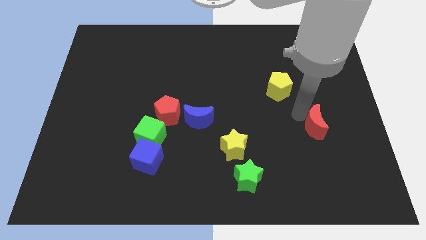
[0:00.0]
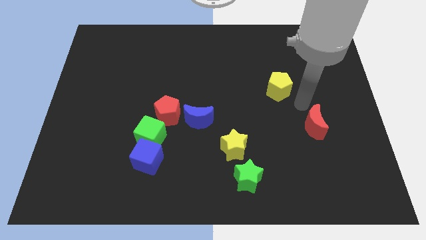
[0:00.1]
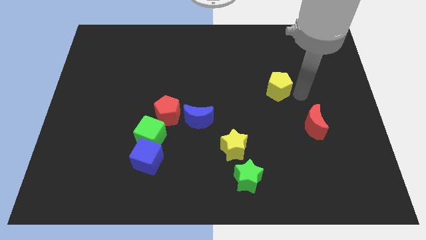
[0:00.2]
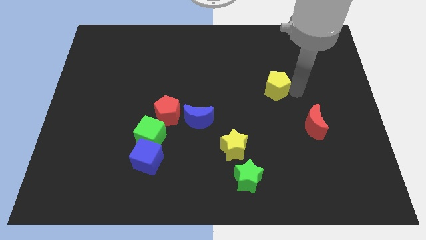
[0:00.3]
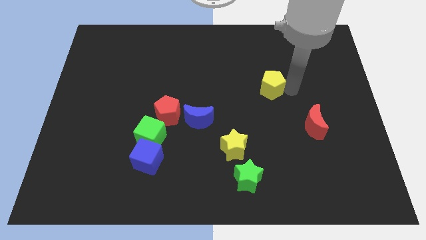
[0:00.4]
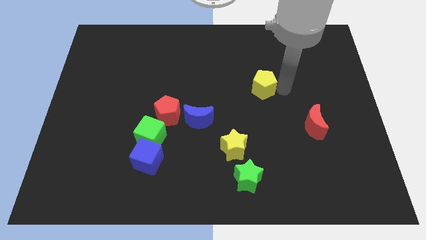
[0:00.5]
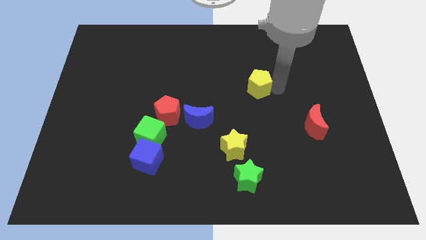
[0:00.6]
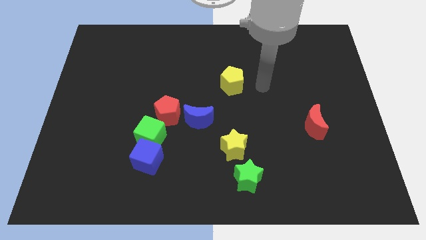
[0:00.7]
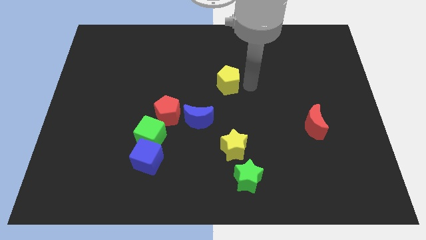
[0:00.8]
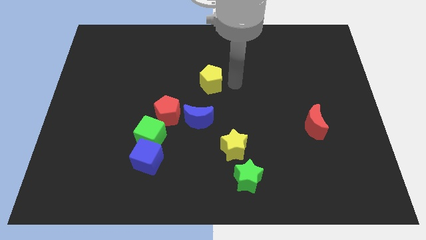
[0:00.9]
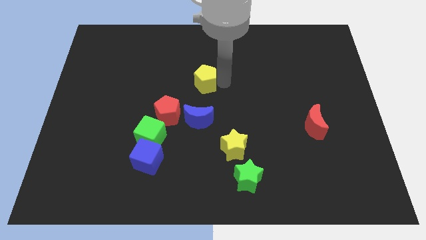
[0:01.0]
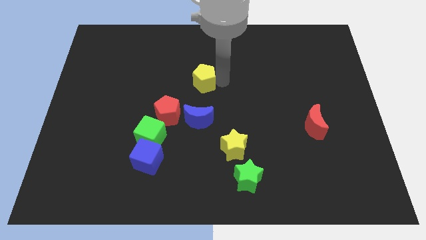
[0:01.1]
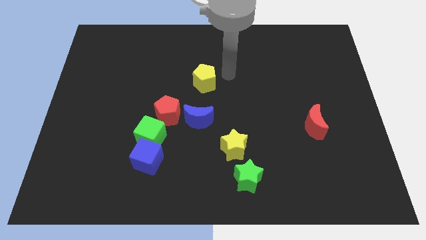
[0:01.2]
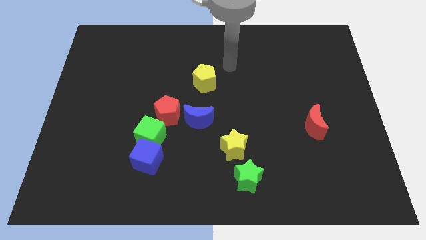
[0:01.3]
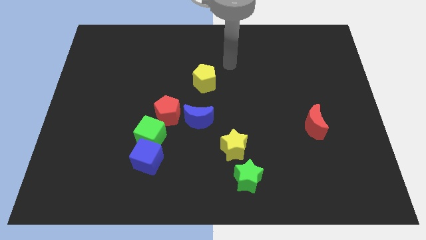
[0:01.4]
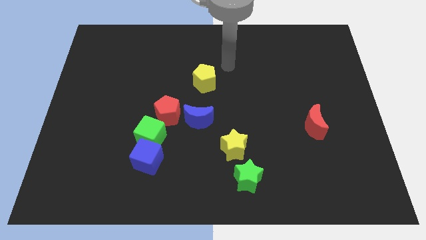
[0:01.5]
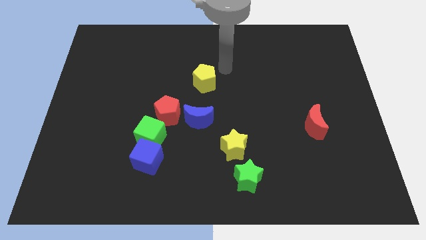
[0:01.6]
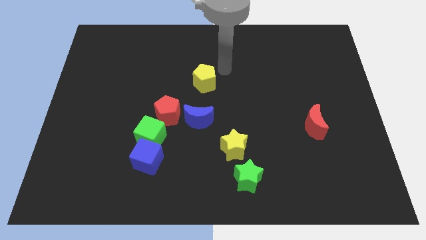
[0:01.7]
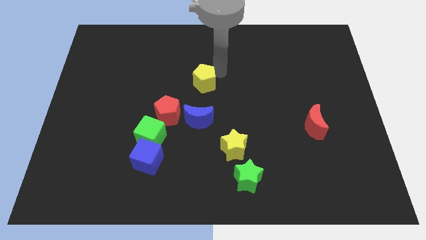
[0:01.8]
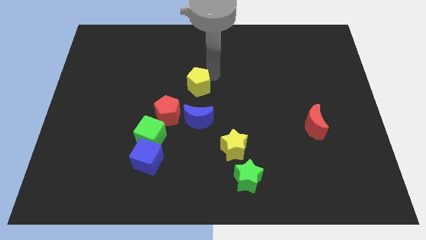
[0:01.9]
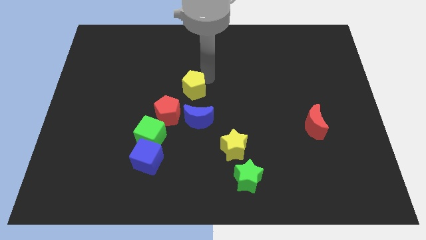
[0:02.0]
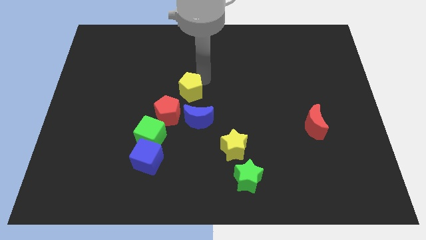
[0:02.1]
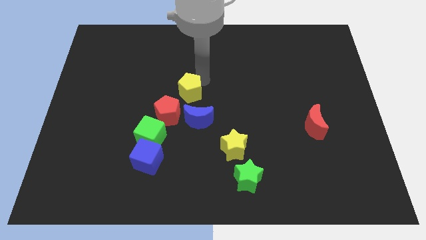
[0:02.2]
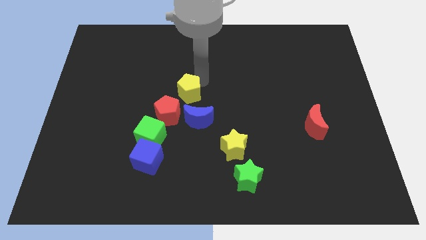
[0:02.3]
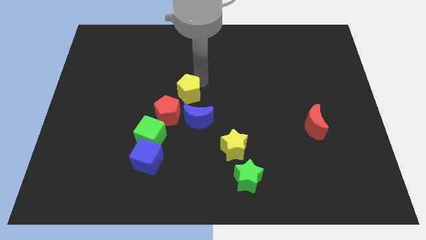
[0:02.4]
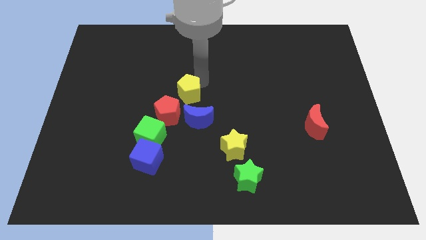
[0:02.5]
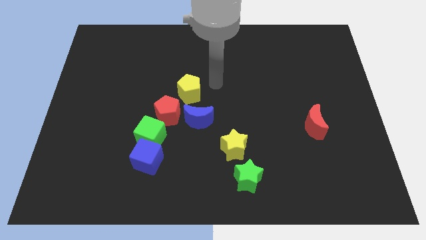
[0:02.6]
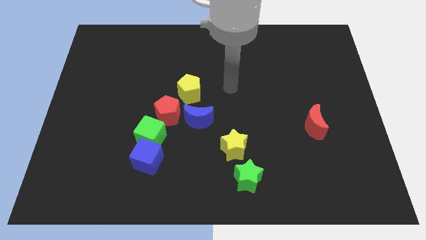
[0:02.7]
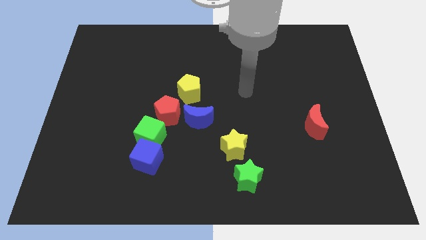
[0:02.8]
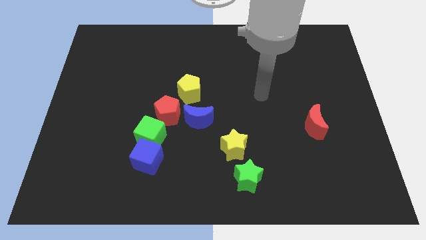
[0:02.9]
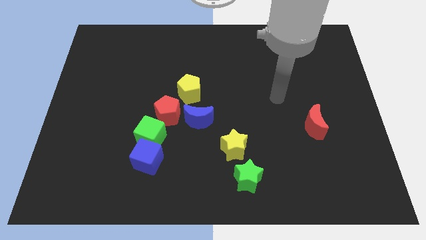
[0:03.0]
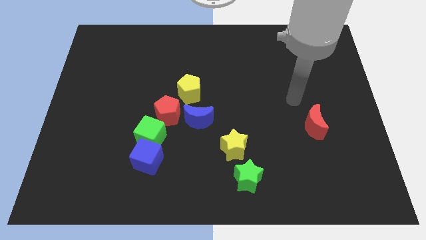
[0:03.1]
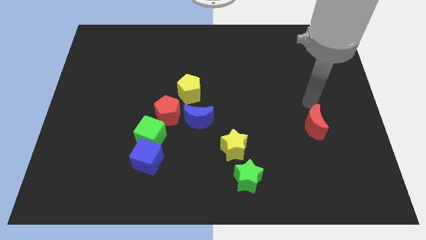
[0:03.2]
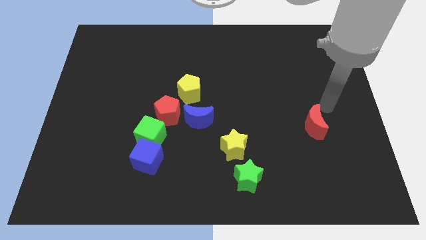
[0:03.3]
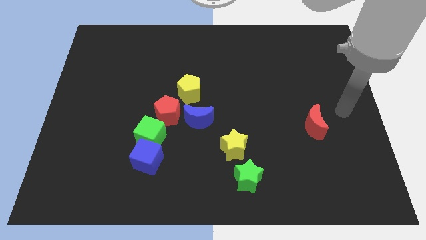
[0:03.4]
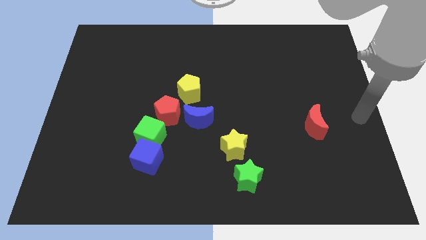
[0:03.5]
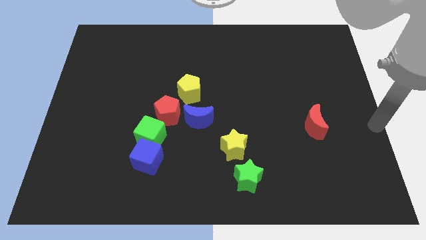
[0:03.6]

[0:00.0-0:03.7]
place the yellow pentagon at the top left side of blue crescent and move away

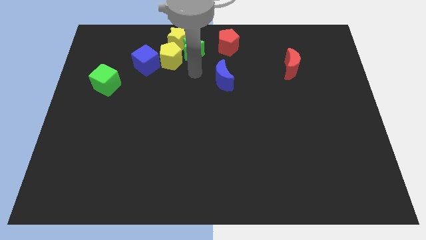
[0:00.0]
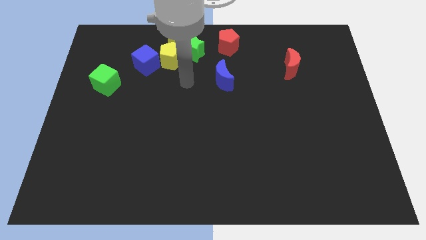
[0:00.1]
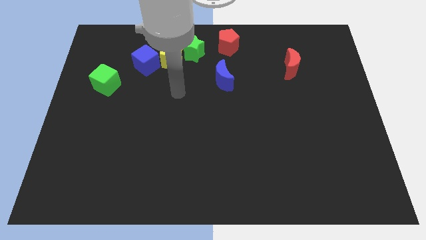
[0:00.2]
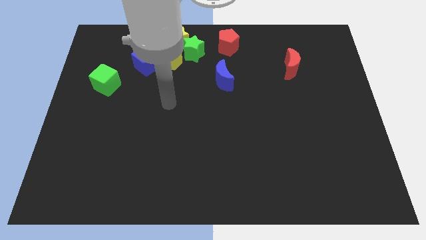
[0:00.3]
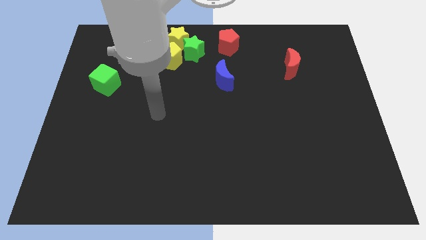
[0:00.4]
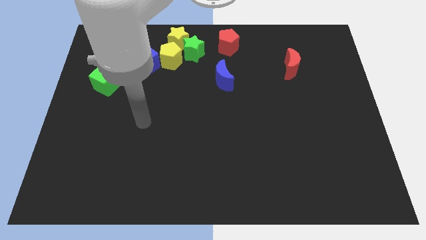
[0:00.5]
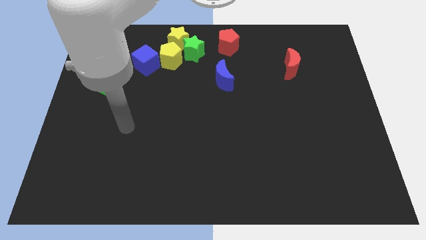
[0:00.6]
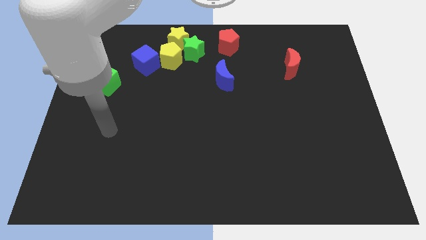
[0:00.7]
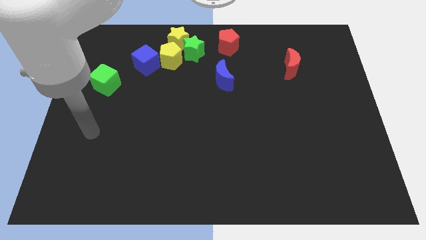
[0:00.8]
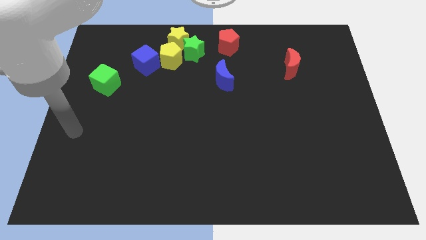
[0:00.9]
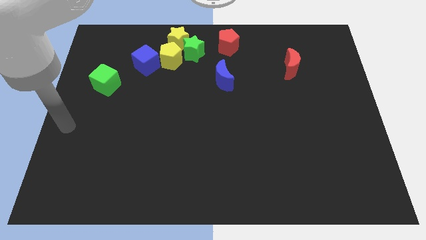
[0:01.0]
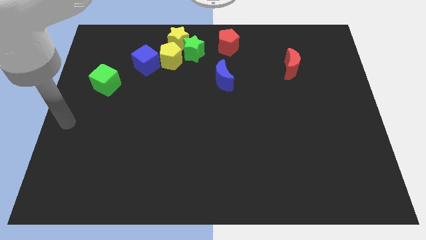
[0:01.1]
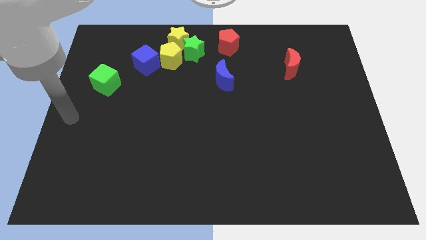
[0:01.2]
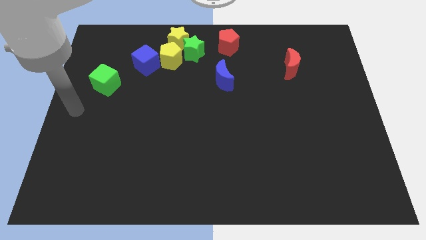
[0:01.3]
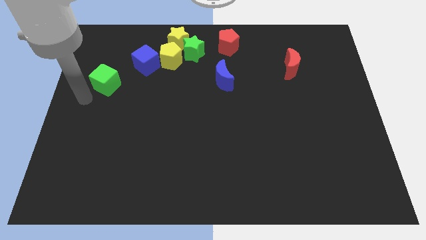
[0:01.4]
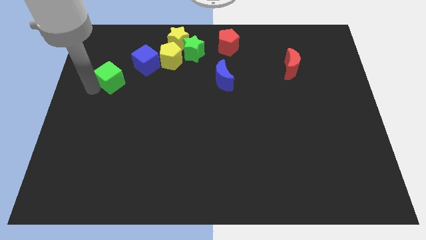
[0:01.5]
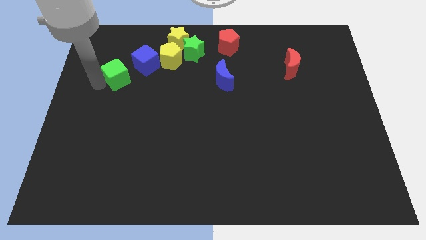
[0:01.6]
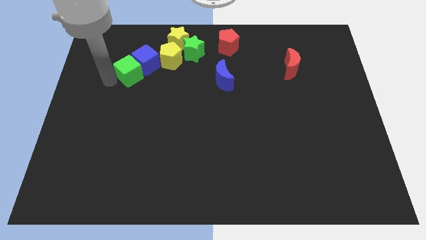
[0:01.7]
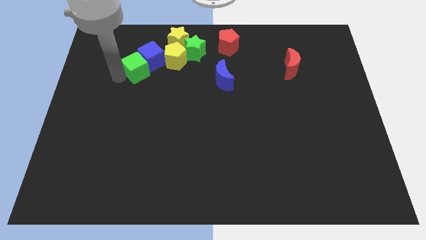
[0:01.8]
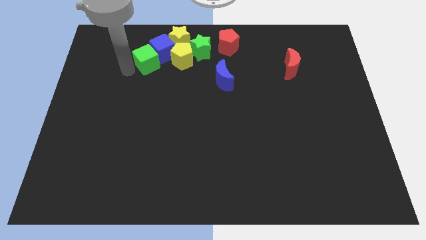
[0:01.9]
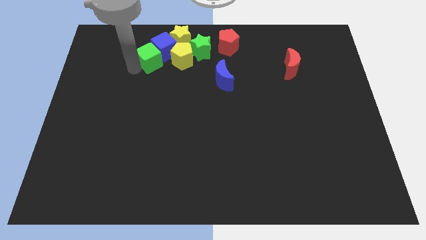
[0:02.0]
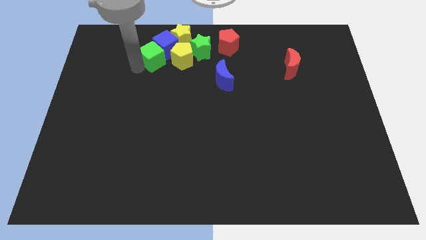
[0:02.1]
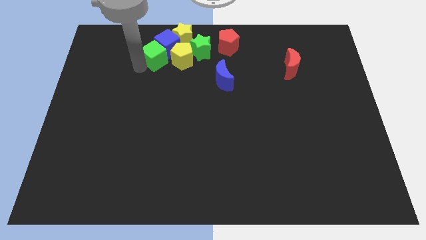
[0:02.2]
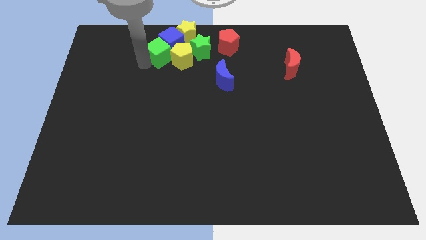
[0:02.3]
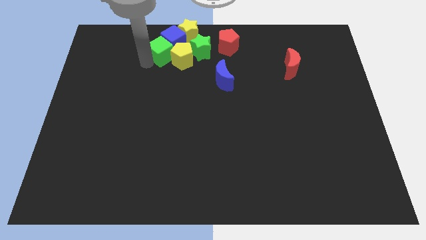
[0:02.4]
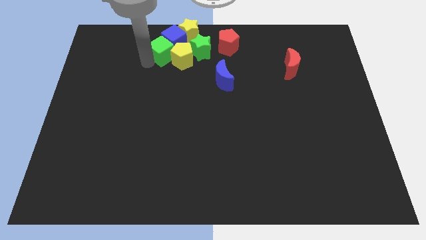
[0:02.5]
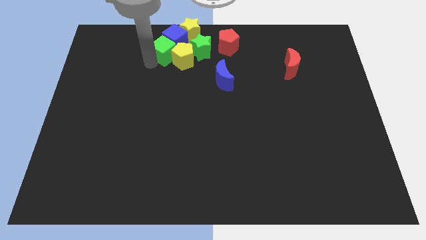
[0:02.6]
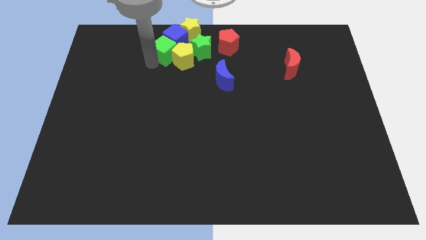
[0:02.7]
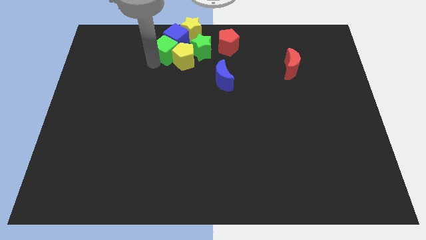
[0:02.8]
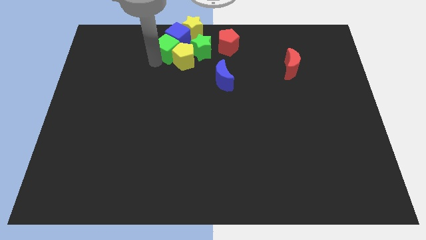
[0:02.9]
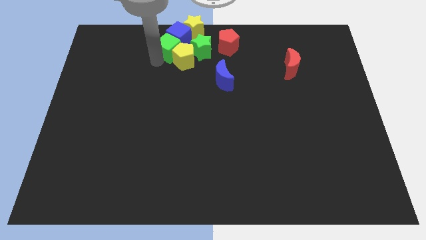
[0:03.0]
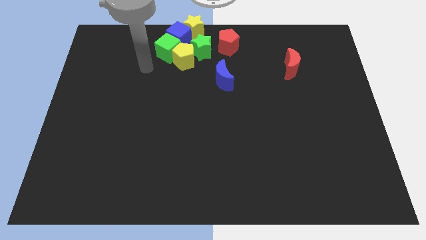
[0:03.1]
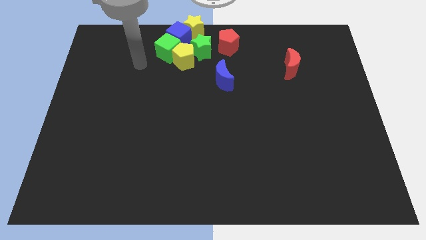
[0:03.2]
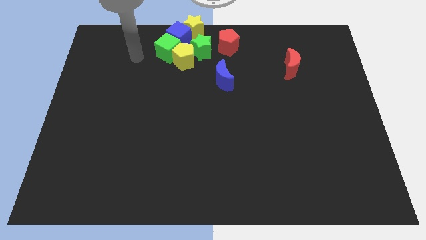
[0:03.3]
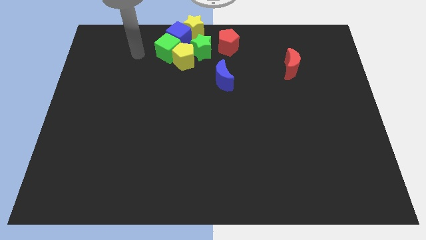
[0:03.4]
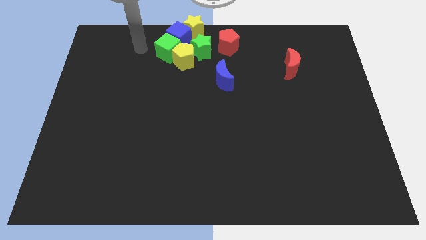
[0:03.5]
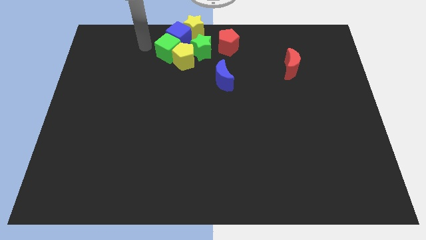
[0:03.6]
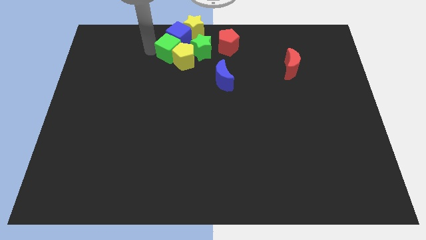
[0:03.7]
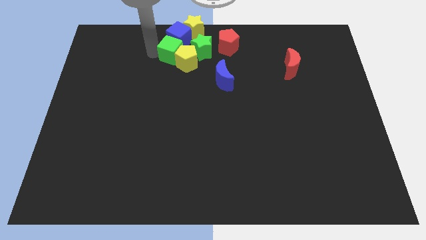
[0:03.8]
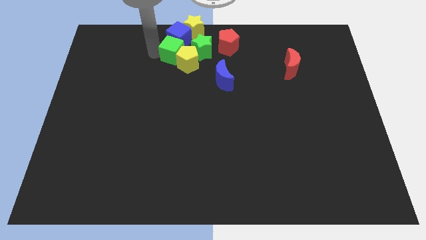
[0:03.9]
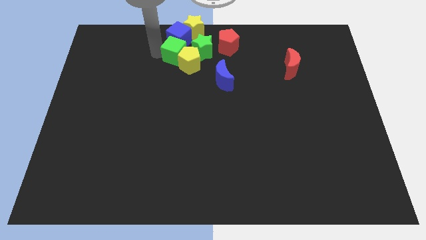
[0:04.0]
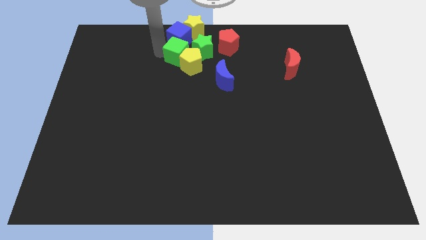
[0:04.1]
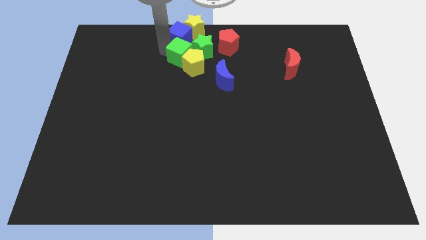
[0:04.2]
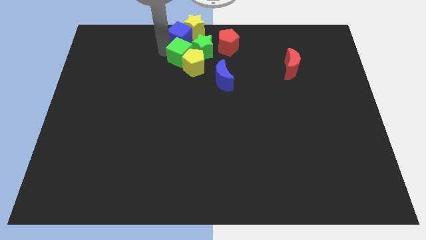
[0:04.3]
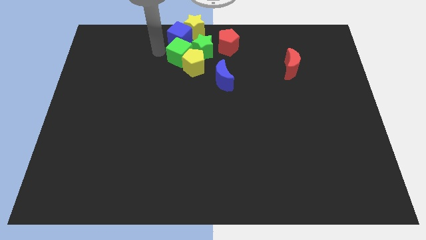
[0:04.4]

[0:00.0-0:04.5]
push the green cube to the left side of the green star

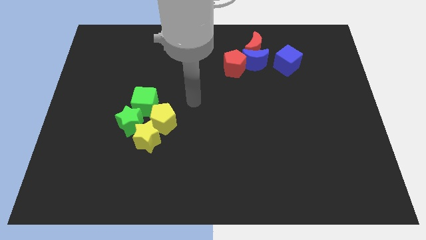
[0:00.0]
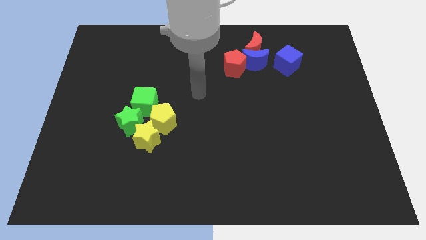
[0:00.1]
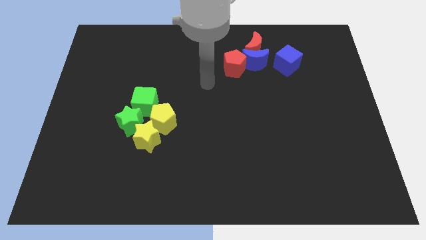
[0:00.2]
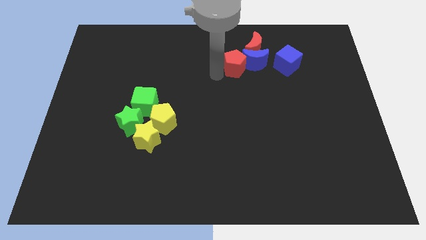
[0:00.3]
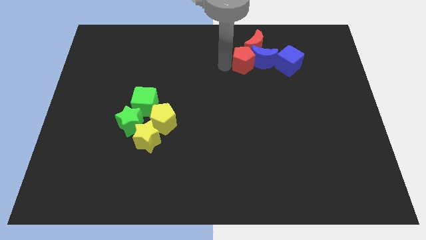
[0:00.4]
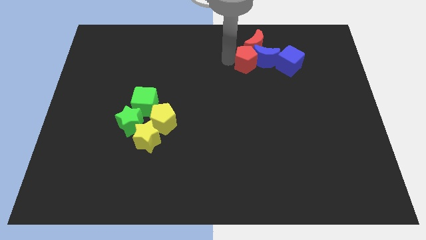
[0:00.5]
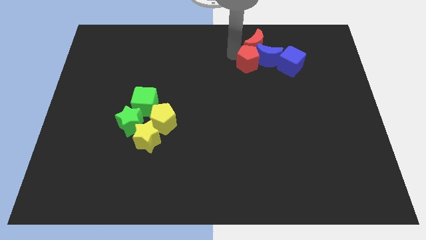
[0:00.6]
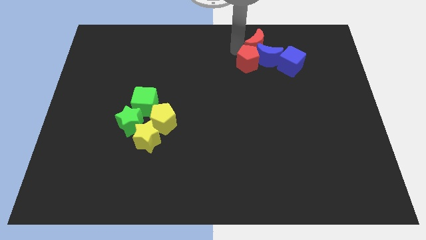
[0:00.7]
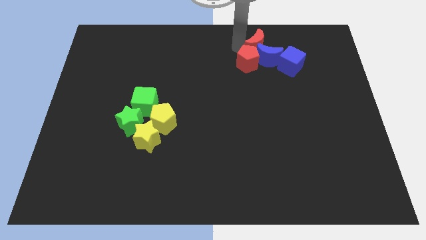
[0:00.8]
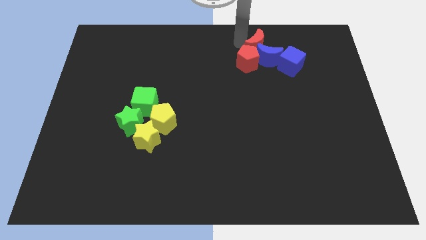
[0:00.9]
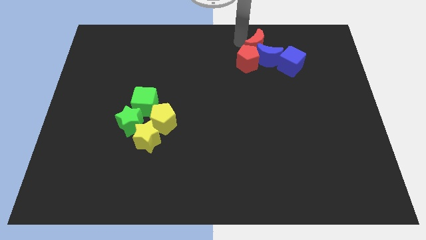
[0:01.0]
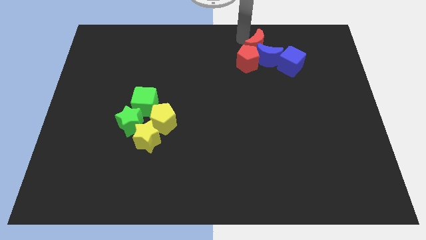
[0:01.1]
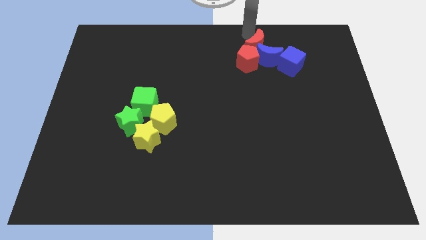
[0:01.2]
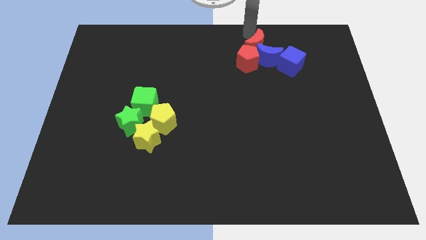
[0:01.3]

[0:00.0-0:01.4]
push the red moon and red pentagon into the blue crescent
